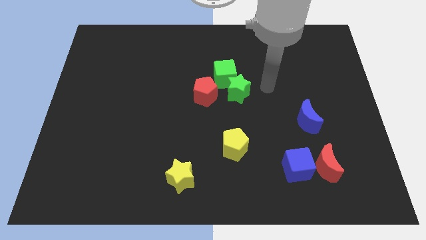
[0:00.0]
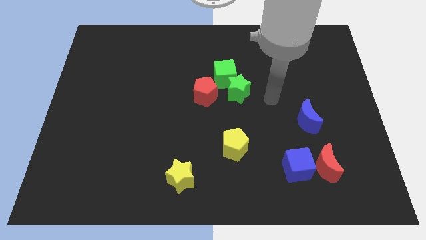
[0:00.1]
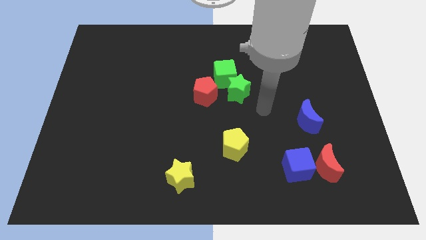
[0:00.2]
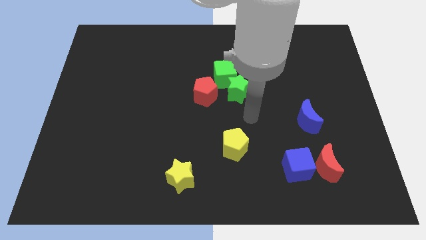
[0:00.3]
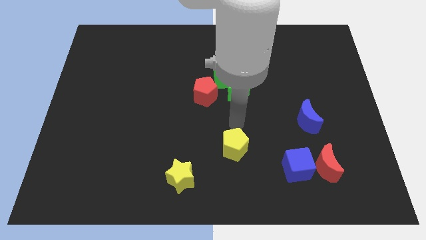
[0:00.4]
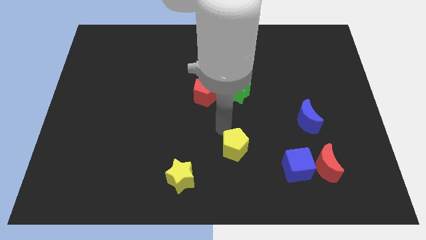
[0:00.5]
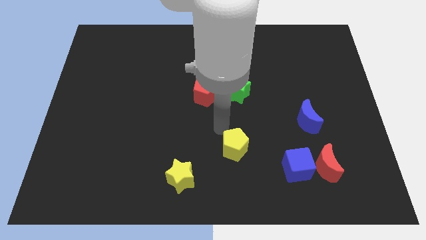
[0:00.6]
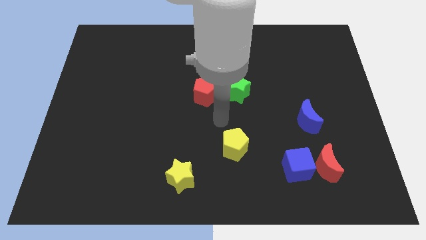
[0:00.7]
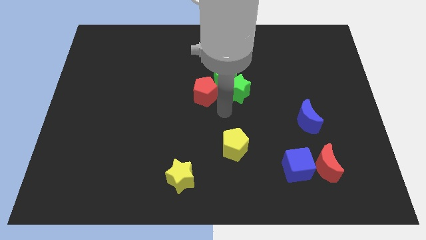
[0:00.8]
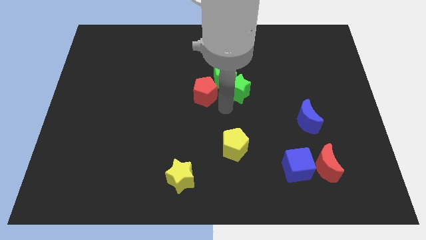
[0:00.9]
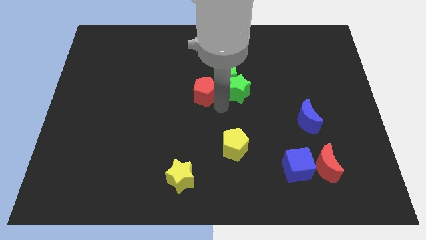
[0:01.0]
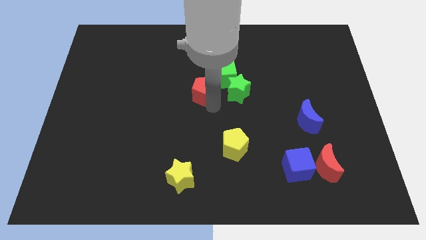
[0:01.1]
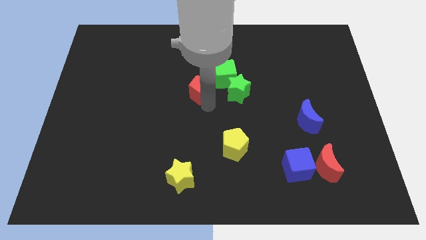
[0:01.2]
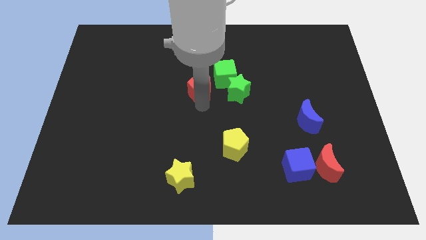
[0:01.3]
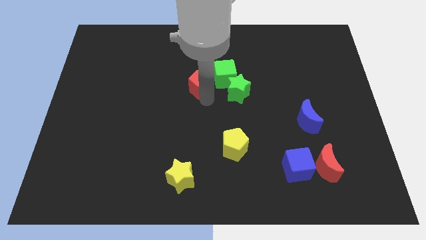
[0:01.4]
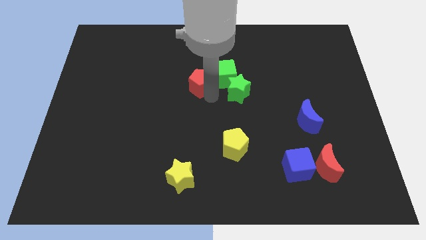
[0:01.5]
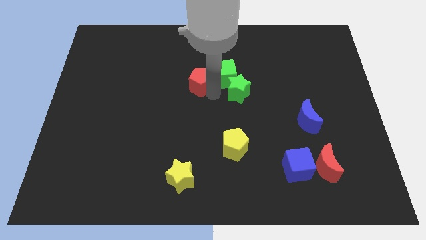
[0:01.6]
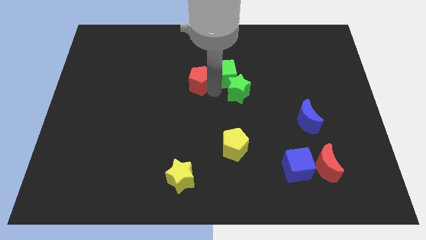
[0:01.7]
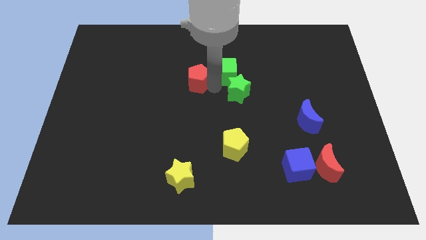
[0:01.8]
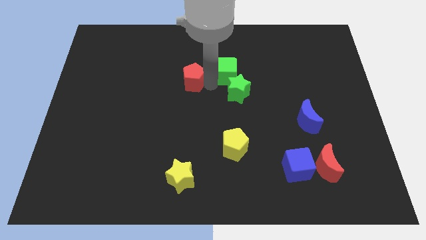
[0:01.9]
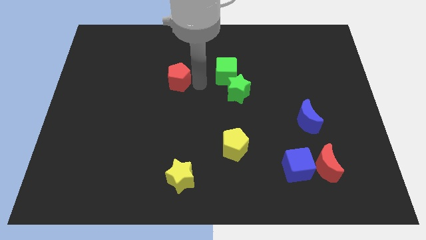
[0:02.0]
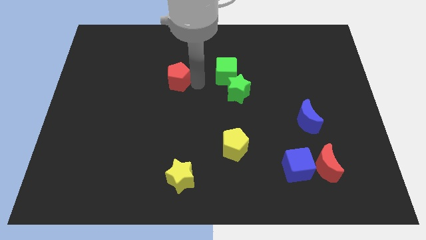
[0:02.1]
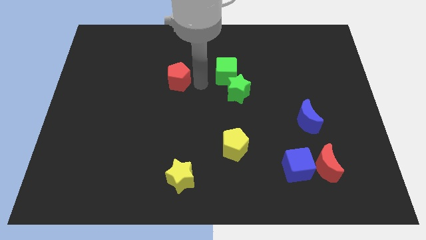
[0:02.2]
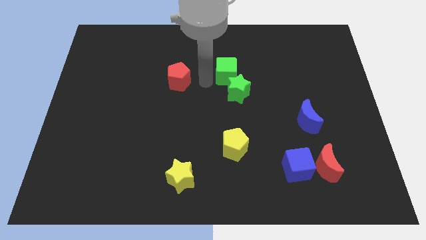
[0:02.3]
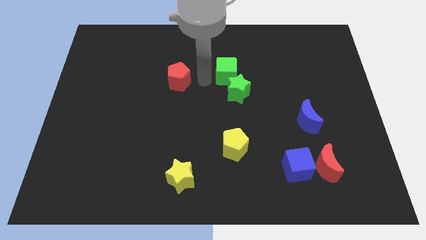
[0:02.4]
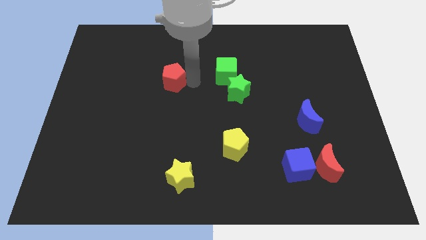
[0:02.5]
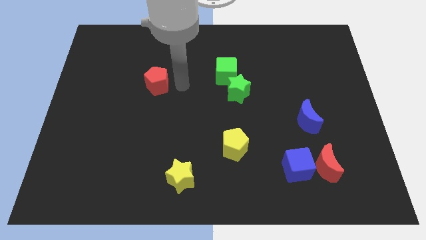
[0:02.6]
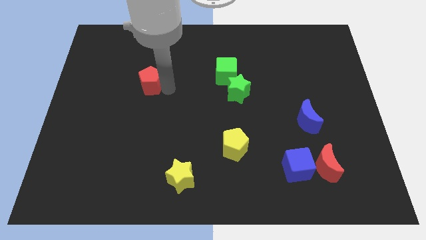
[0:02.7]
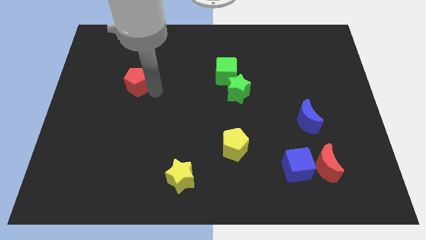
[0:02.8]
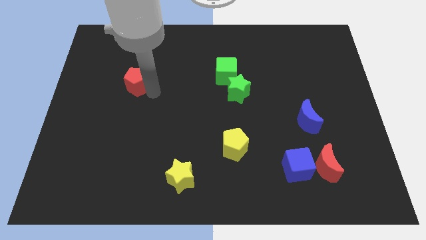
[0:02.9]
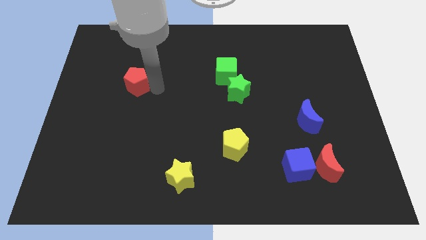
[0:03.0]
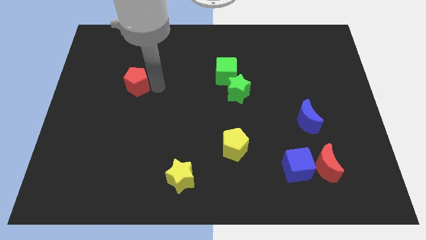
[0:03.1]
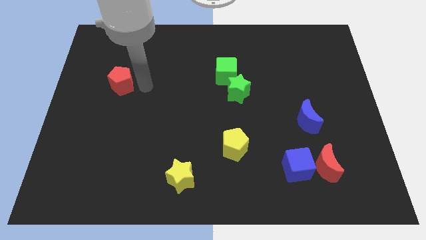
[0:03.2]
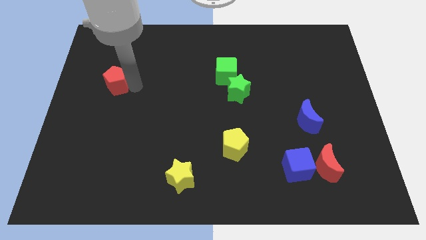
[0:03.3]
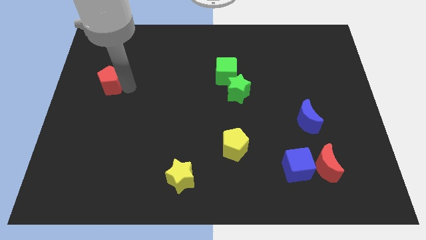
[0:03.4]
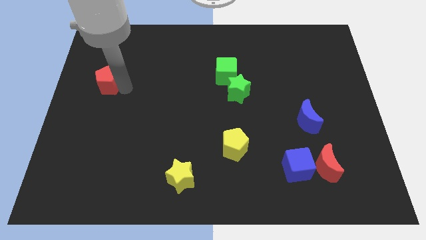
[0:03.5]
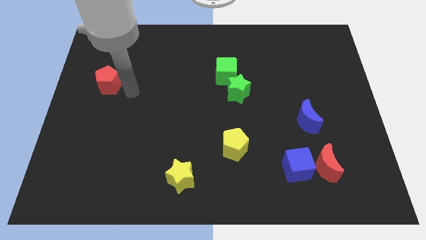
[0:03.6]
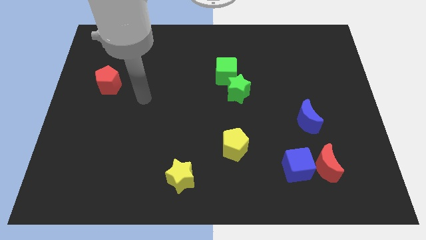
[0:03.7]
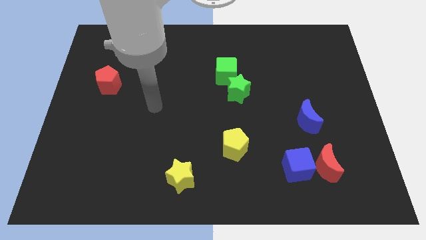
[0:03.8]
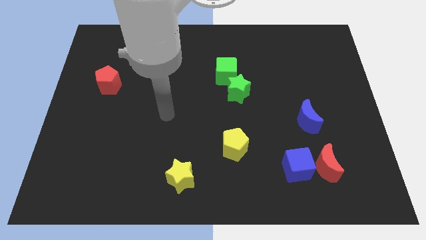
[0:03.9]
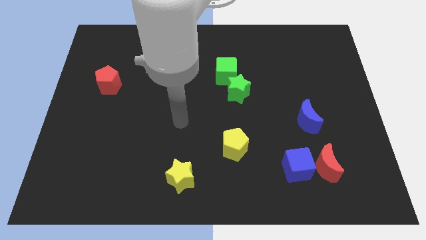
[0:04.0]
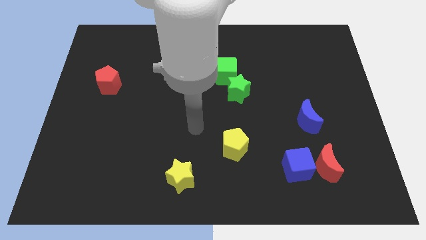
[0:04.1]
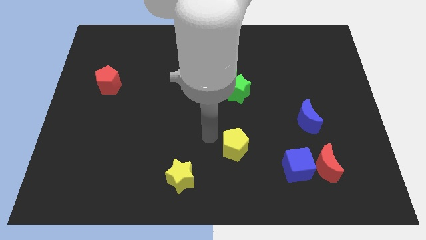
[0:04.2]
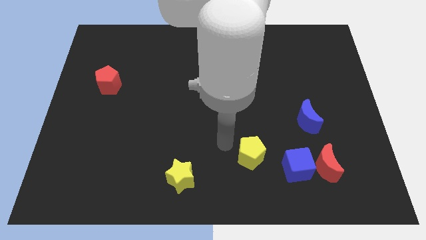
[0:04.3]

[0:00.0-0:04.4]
drag the red pentagon towards the top left side of the board

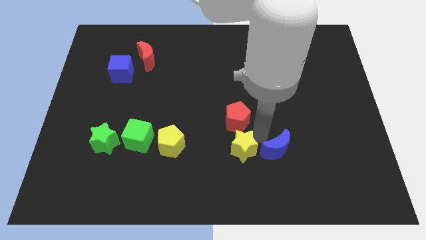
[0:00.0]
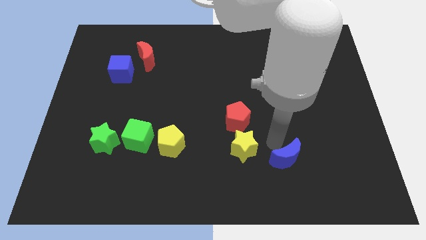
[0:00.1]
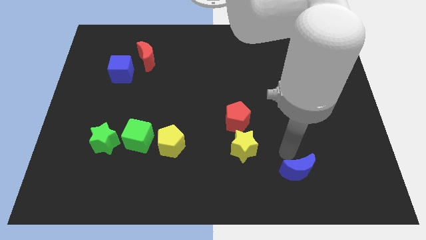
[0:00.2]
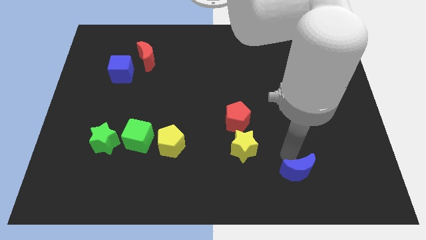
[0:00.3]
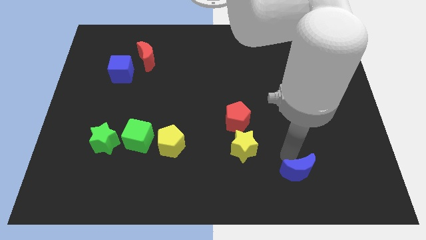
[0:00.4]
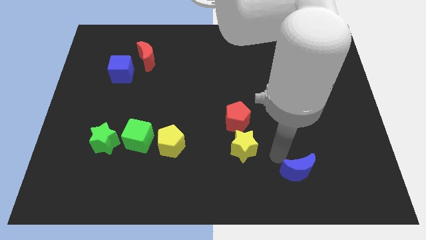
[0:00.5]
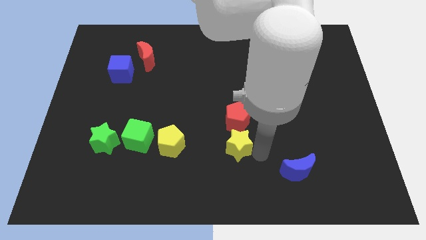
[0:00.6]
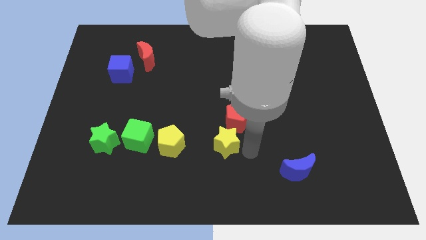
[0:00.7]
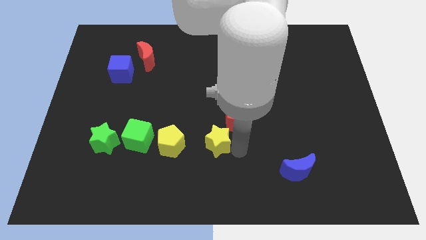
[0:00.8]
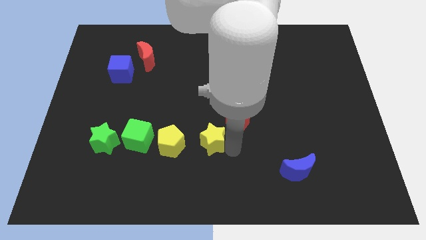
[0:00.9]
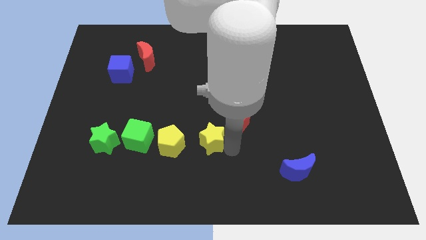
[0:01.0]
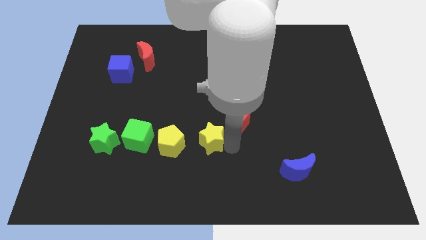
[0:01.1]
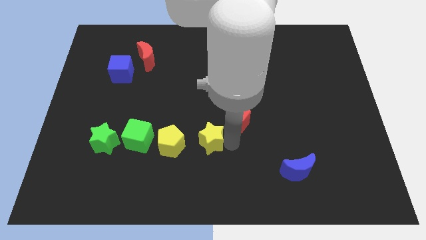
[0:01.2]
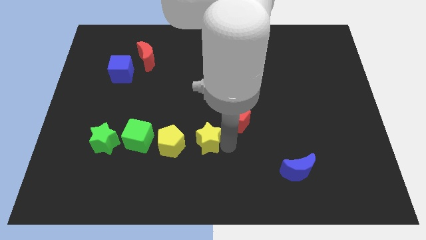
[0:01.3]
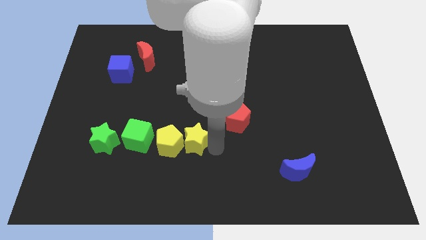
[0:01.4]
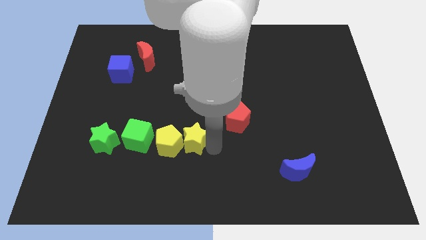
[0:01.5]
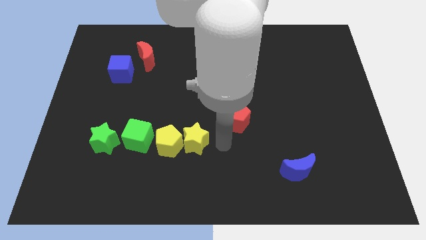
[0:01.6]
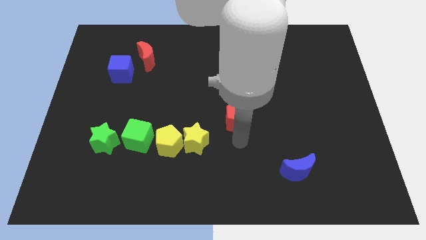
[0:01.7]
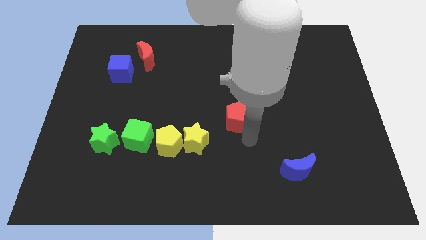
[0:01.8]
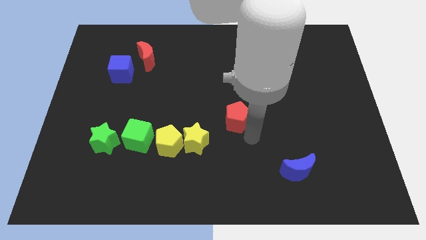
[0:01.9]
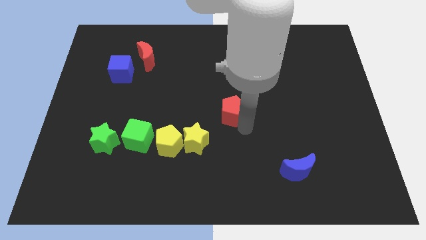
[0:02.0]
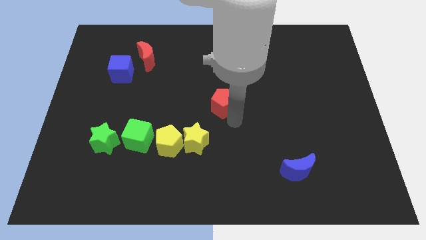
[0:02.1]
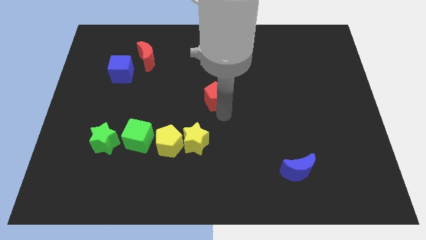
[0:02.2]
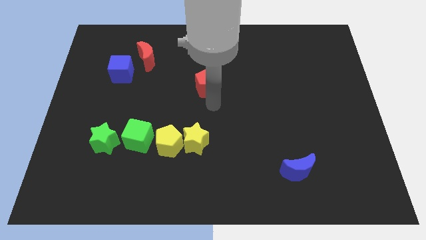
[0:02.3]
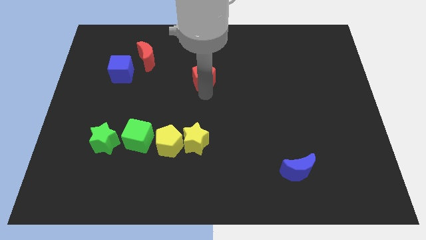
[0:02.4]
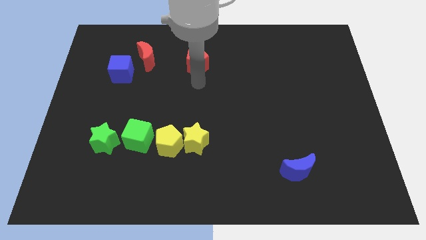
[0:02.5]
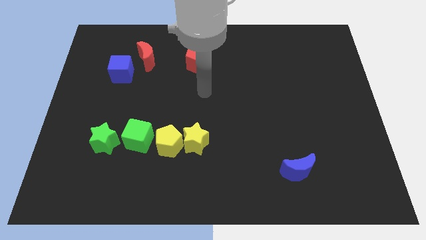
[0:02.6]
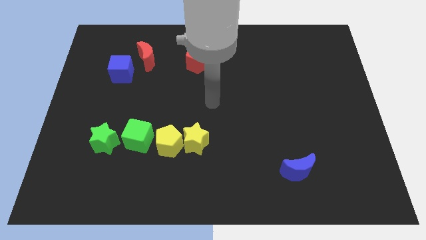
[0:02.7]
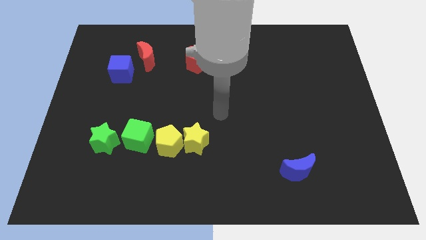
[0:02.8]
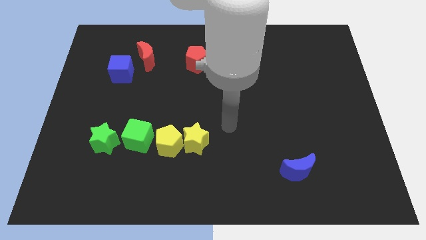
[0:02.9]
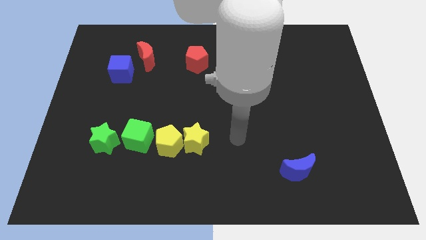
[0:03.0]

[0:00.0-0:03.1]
separate the blue cube yellow star and red pentagon from each others

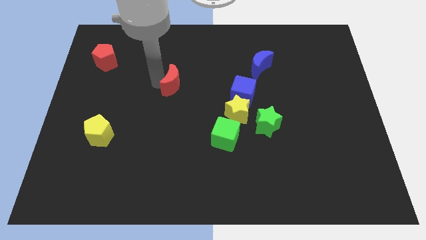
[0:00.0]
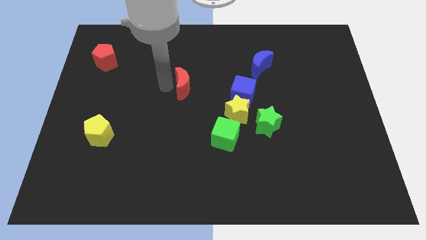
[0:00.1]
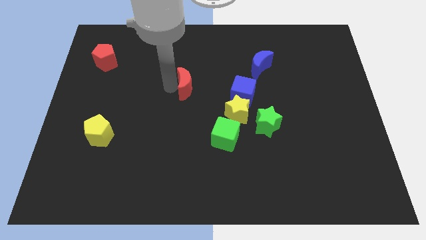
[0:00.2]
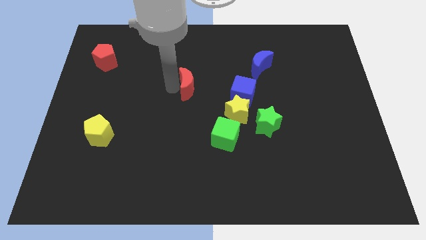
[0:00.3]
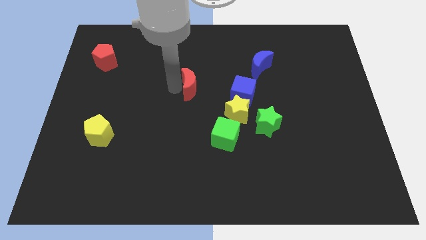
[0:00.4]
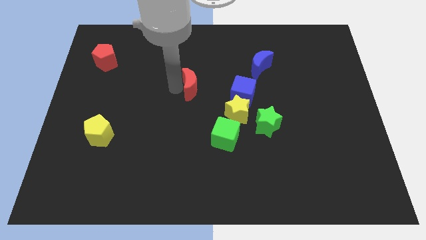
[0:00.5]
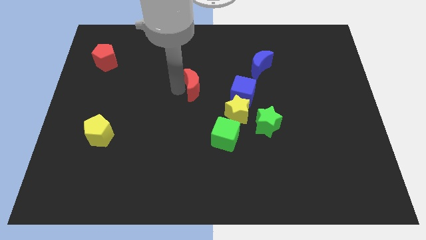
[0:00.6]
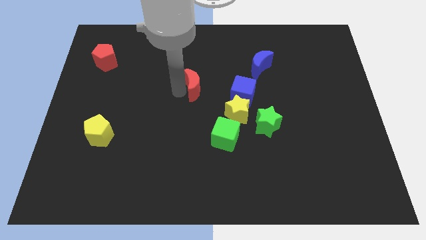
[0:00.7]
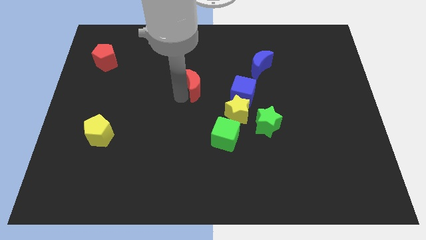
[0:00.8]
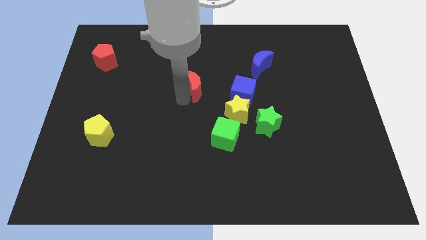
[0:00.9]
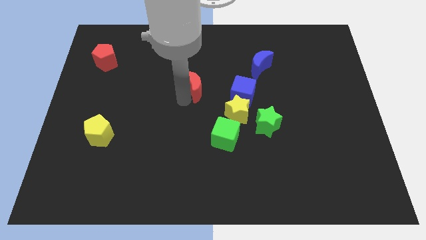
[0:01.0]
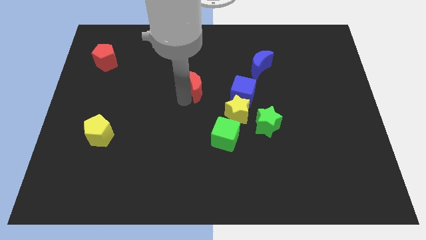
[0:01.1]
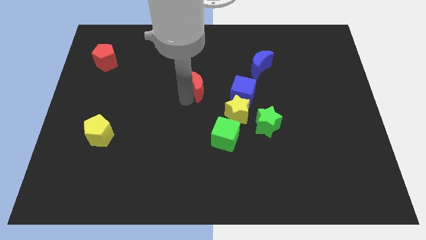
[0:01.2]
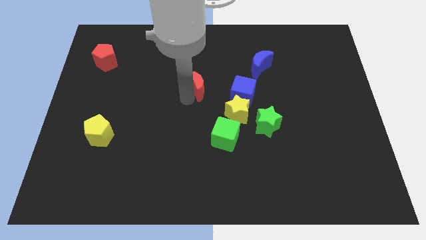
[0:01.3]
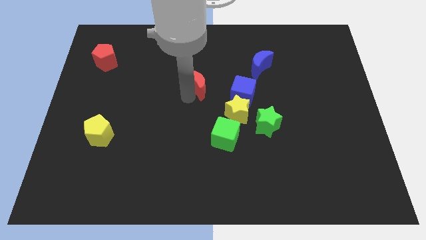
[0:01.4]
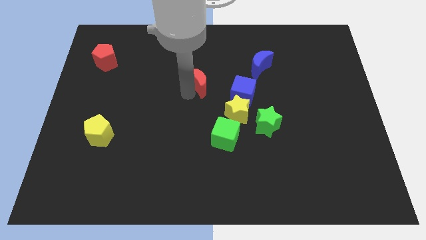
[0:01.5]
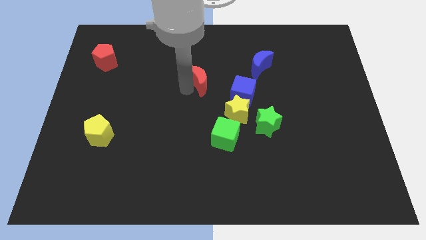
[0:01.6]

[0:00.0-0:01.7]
move the red moon towards the blue cube
